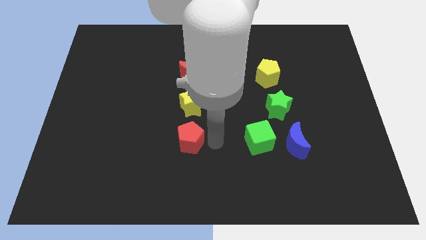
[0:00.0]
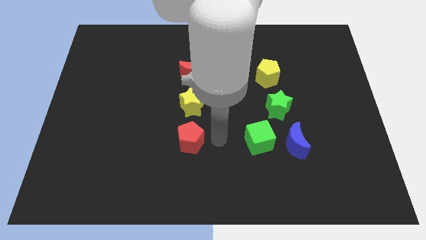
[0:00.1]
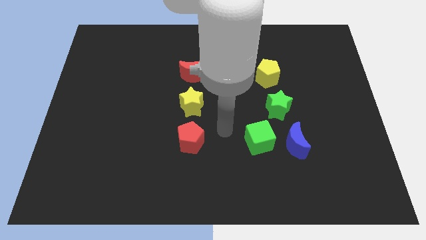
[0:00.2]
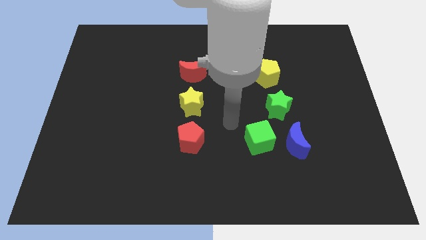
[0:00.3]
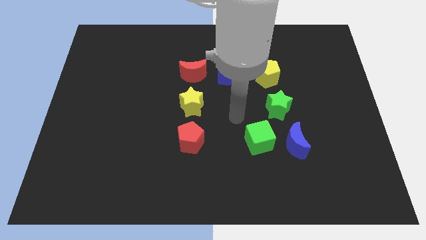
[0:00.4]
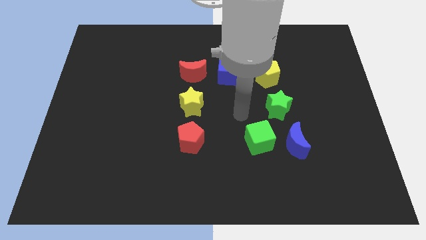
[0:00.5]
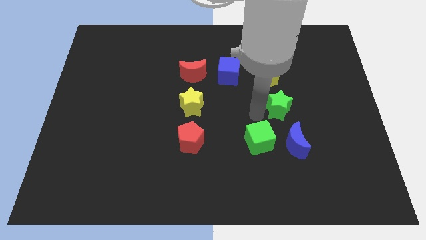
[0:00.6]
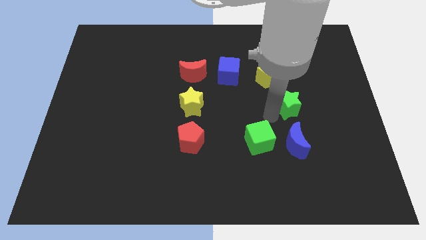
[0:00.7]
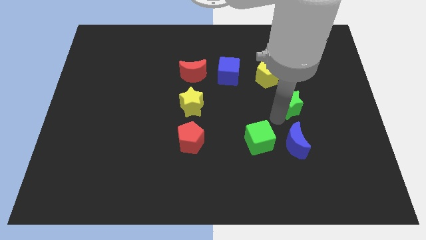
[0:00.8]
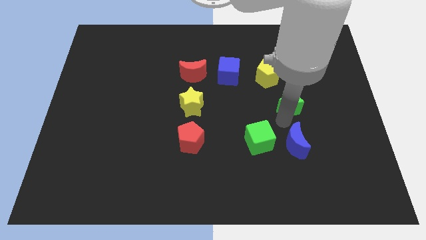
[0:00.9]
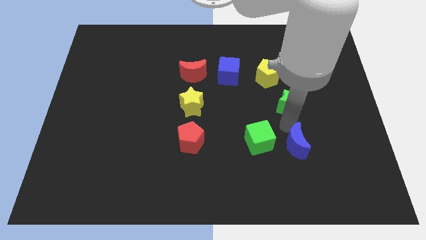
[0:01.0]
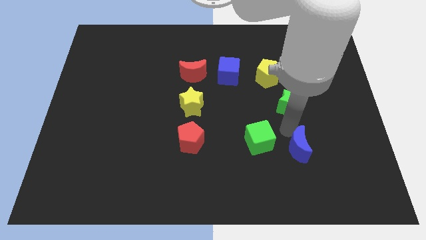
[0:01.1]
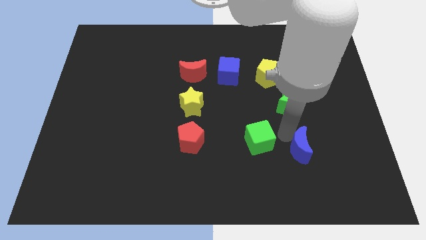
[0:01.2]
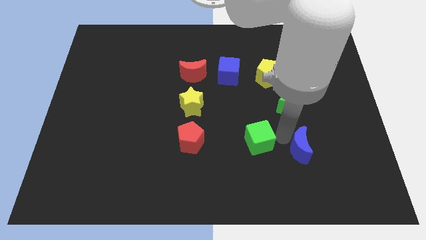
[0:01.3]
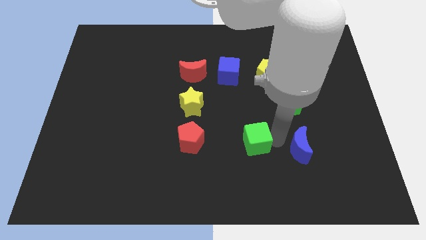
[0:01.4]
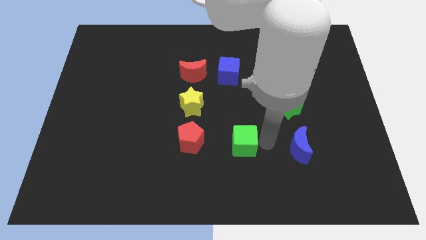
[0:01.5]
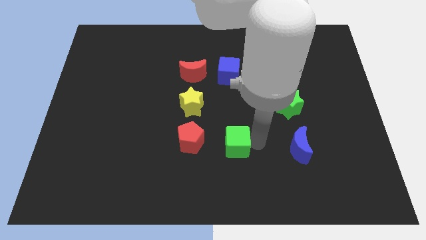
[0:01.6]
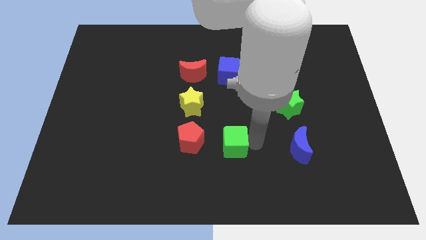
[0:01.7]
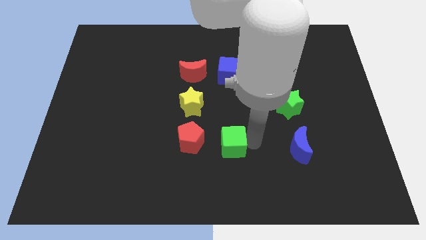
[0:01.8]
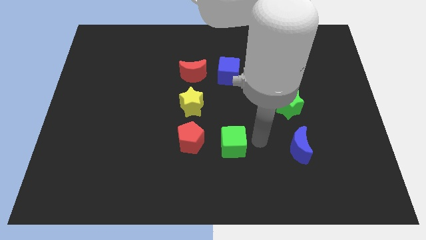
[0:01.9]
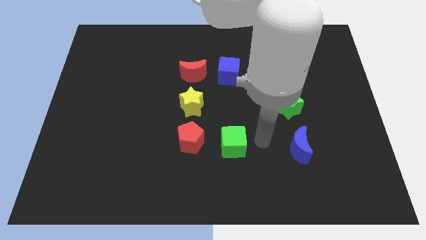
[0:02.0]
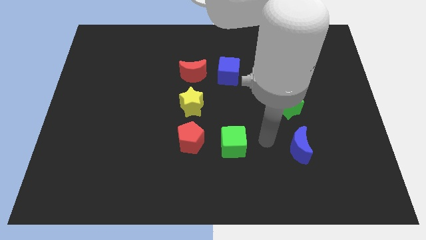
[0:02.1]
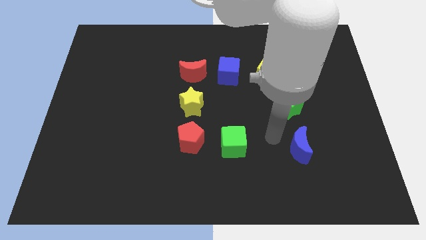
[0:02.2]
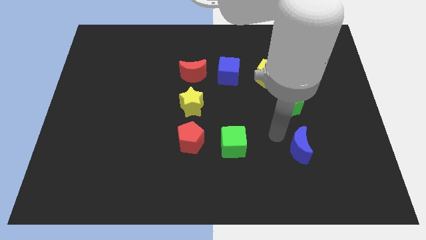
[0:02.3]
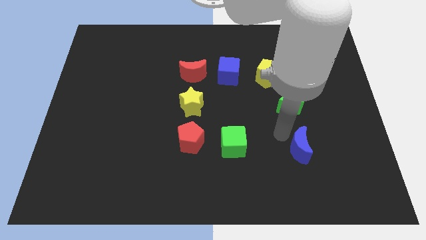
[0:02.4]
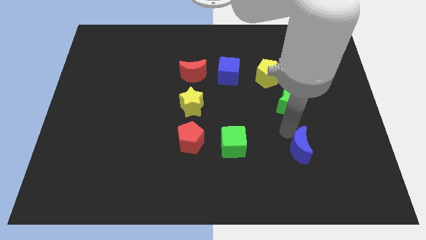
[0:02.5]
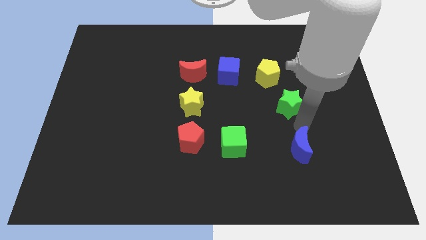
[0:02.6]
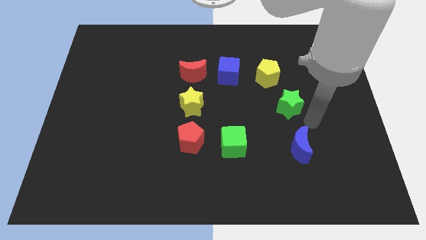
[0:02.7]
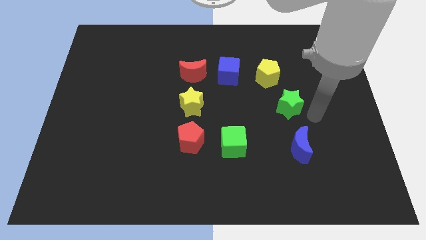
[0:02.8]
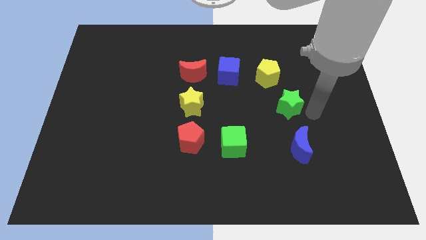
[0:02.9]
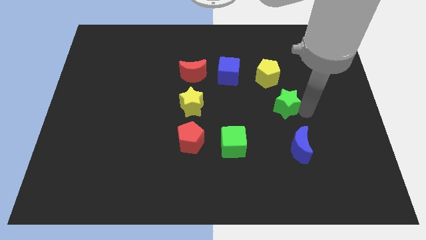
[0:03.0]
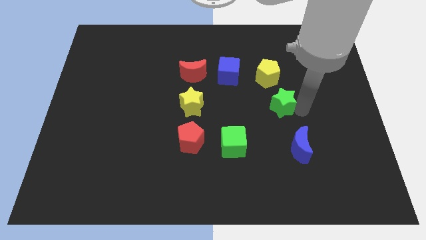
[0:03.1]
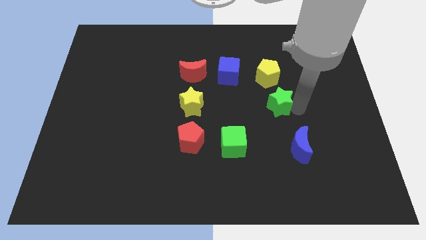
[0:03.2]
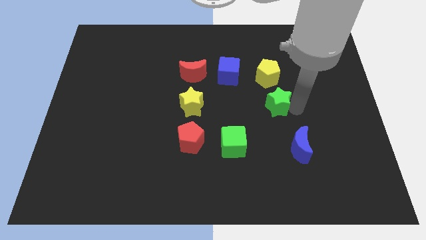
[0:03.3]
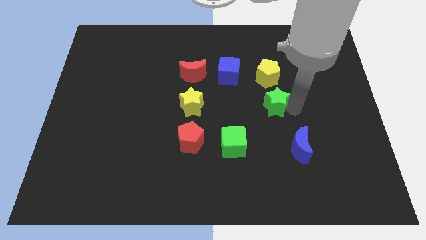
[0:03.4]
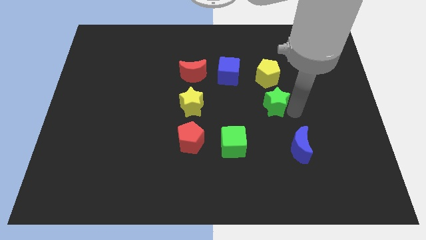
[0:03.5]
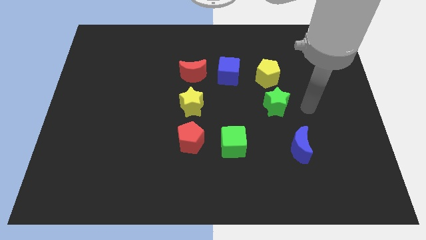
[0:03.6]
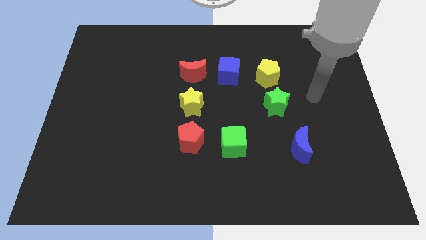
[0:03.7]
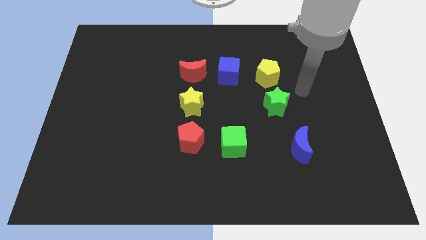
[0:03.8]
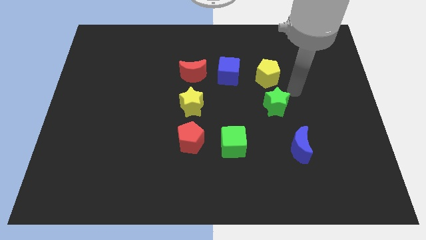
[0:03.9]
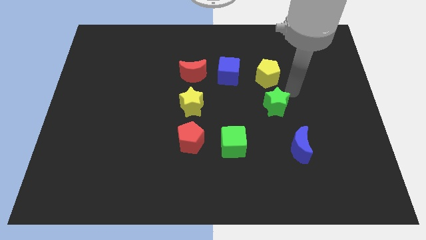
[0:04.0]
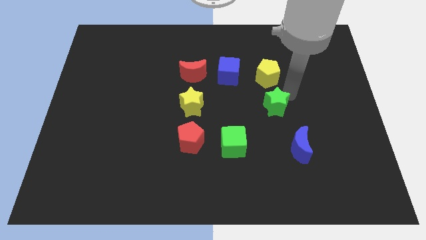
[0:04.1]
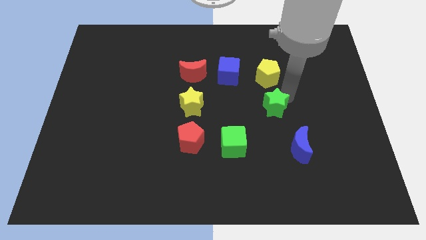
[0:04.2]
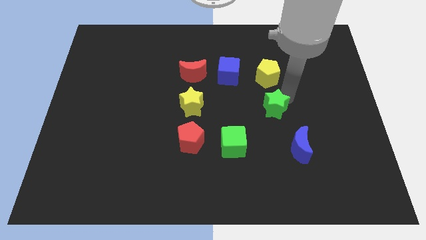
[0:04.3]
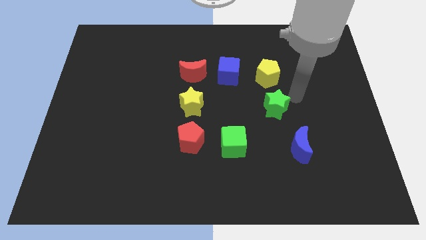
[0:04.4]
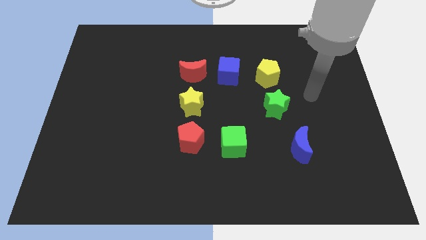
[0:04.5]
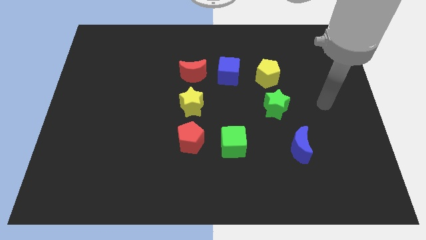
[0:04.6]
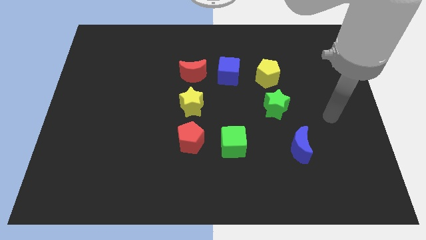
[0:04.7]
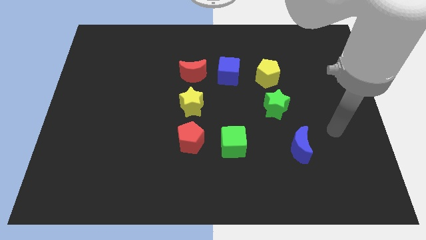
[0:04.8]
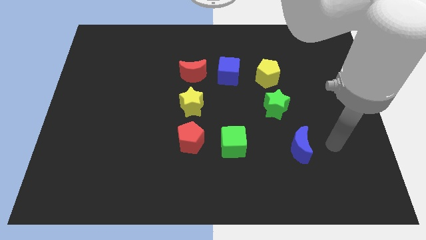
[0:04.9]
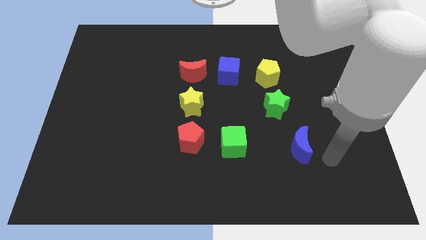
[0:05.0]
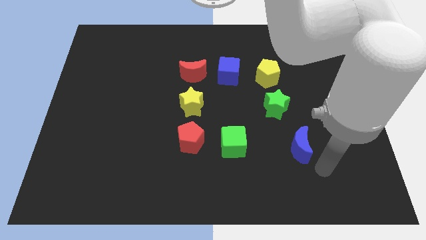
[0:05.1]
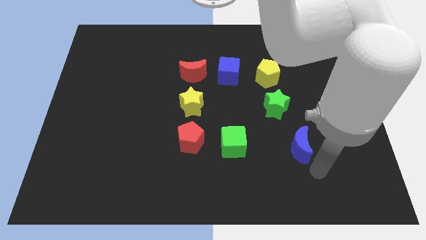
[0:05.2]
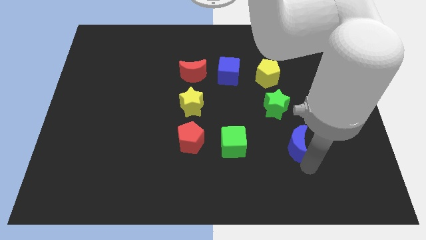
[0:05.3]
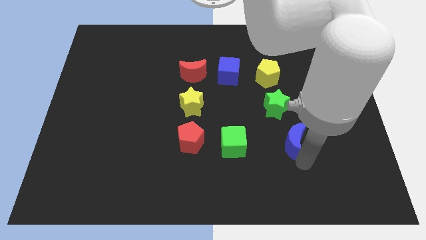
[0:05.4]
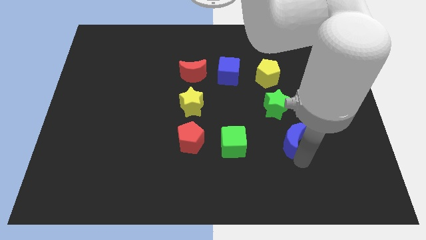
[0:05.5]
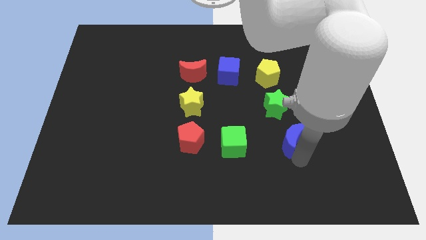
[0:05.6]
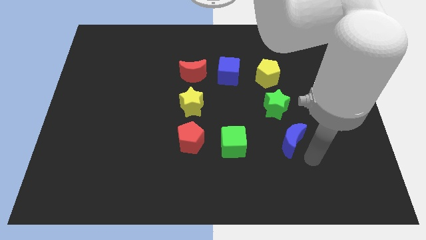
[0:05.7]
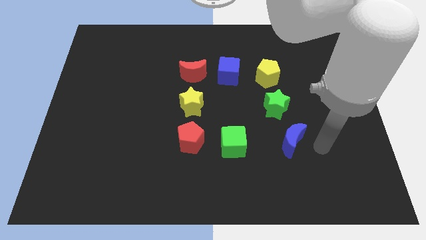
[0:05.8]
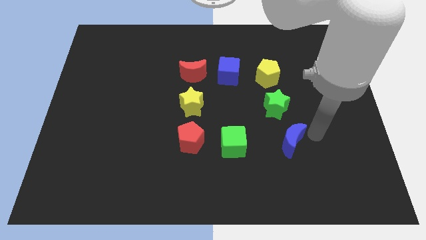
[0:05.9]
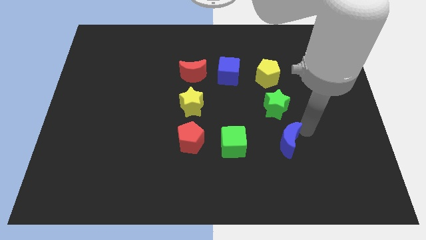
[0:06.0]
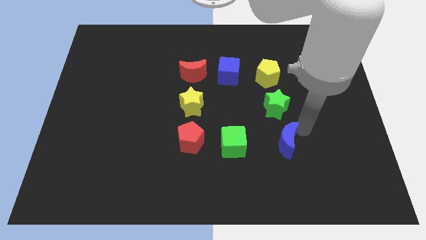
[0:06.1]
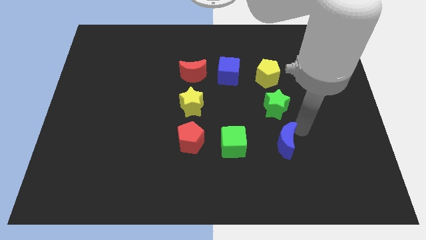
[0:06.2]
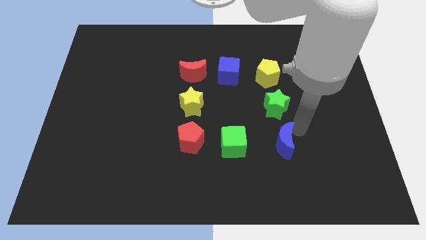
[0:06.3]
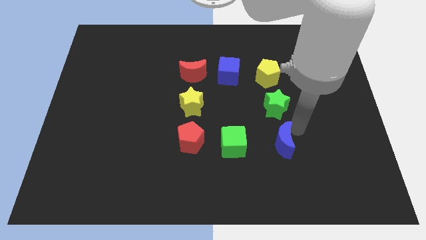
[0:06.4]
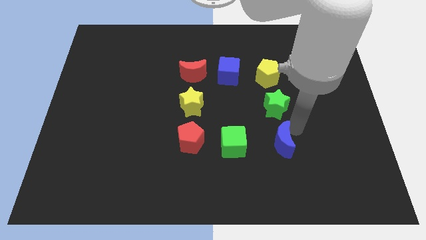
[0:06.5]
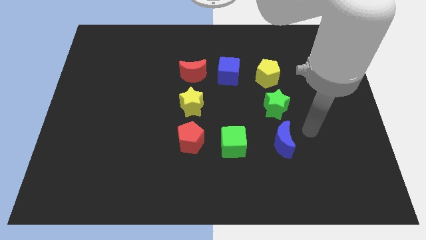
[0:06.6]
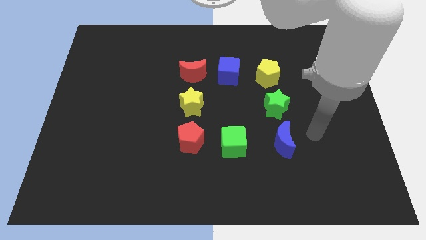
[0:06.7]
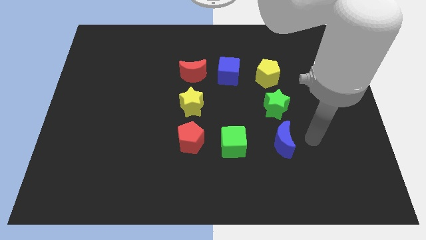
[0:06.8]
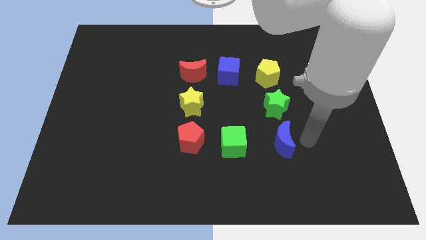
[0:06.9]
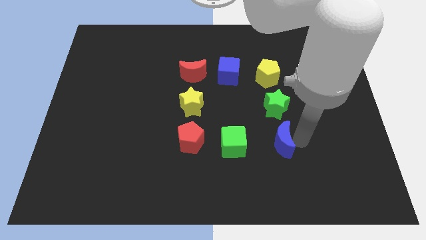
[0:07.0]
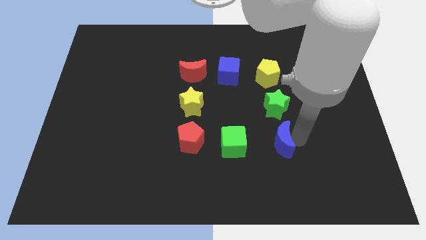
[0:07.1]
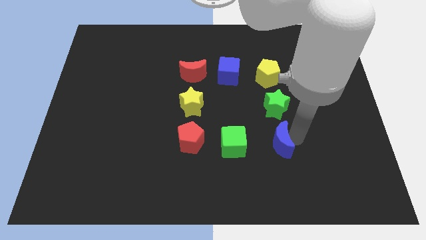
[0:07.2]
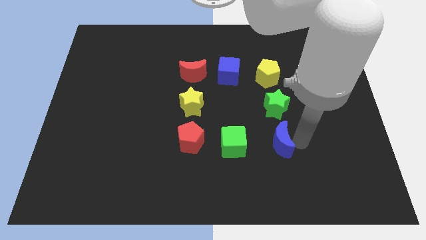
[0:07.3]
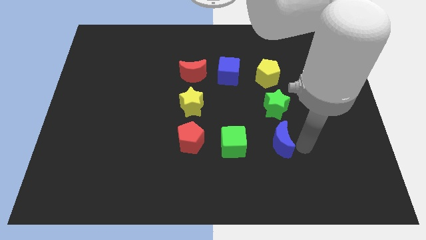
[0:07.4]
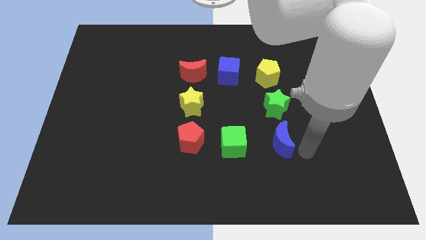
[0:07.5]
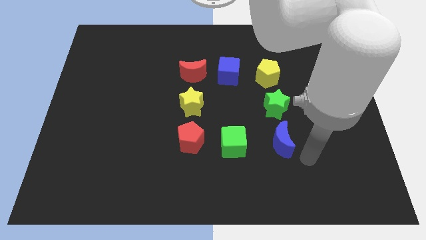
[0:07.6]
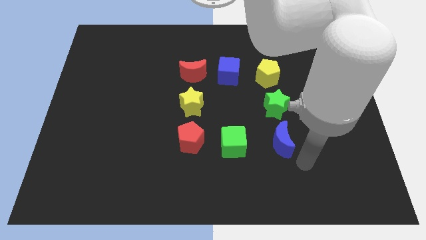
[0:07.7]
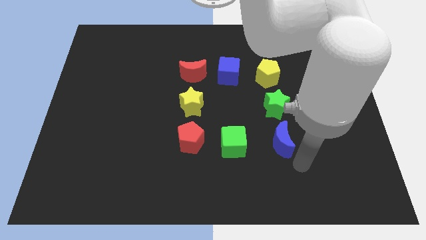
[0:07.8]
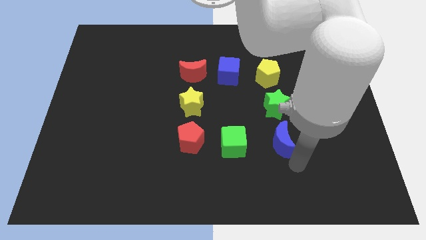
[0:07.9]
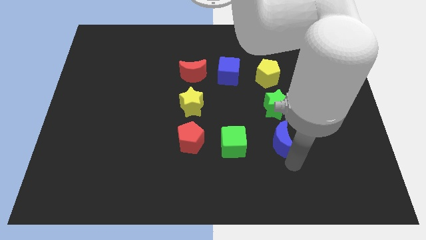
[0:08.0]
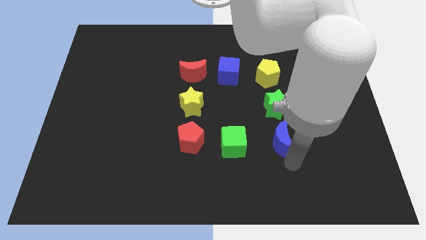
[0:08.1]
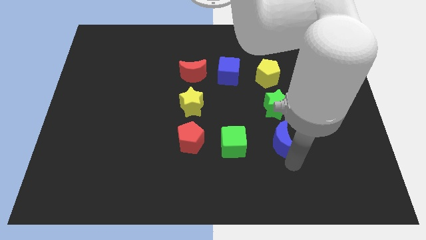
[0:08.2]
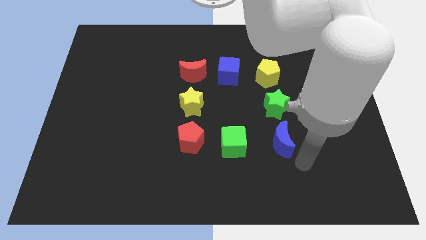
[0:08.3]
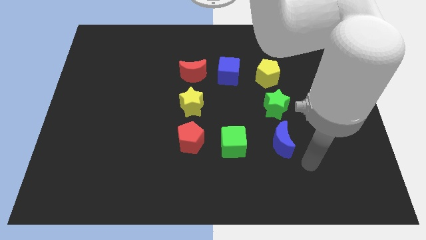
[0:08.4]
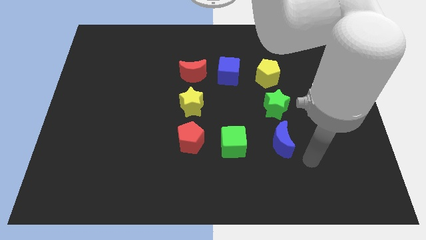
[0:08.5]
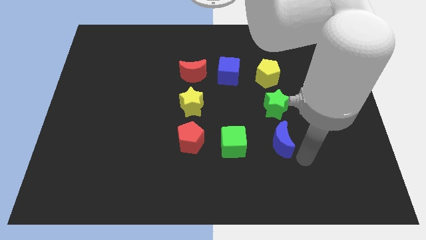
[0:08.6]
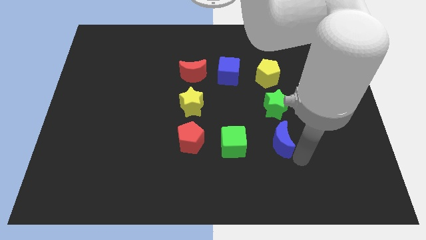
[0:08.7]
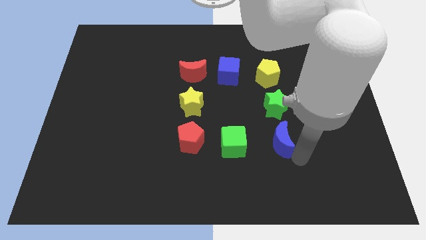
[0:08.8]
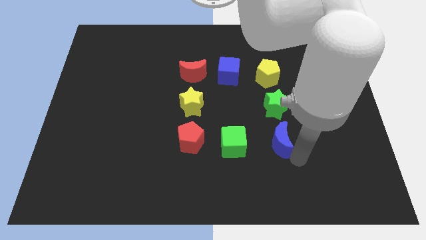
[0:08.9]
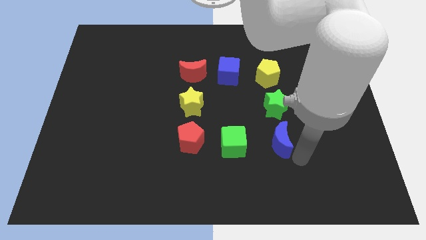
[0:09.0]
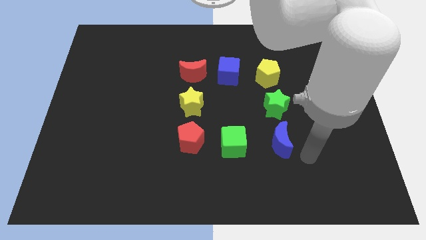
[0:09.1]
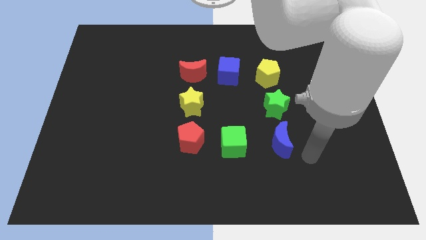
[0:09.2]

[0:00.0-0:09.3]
make a square figure with the blocks at the center of the board
